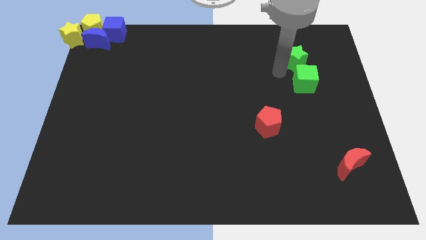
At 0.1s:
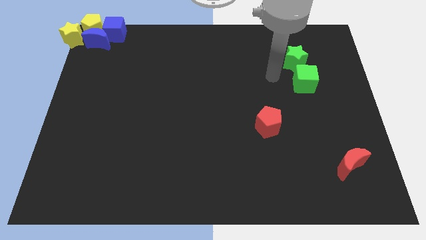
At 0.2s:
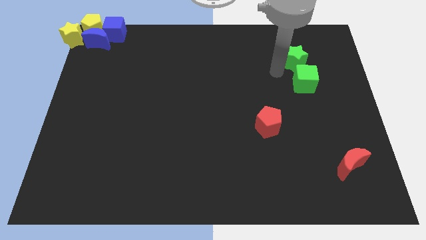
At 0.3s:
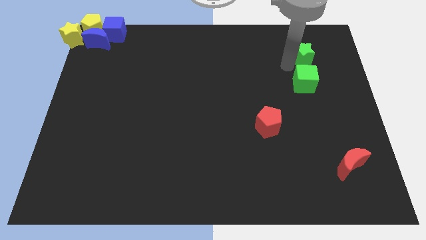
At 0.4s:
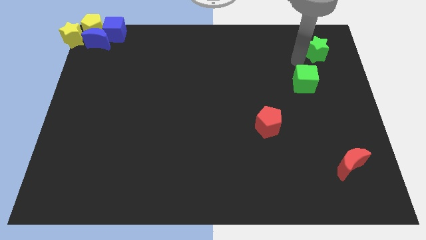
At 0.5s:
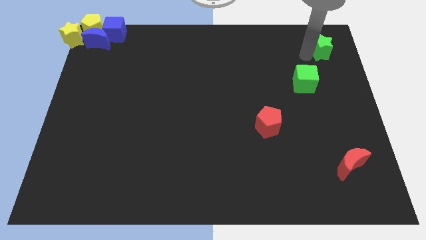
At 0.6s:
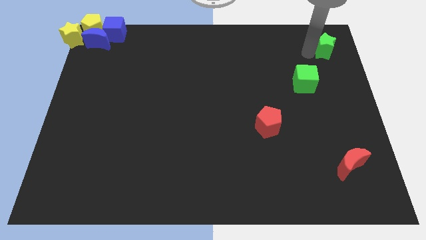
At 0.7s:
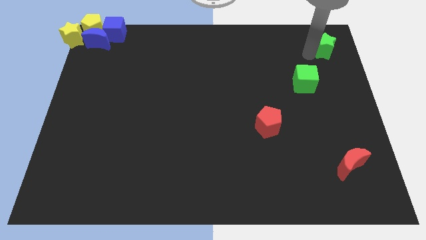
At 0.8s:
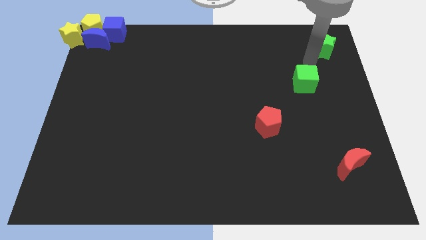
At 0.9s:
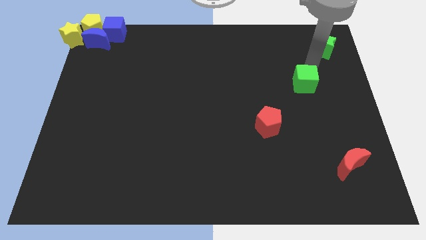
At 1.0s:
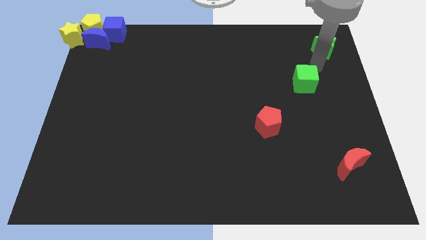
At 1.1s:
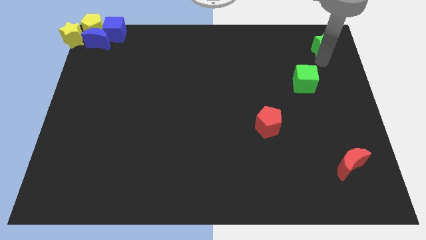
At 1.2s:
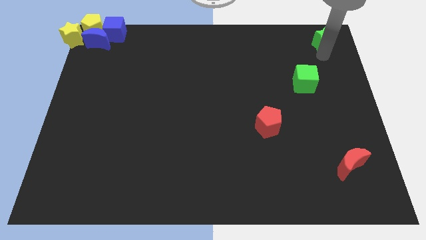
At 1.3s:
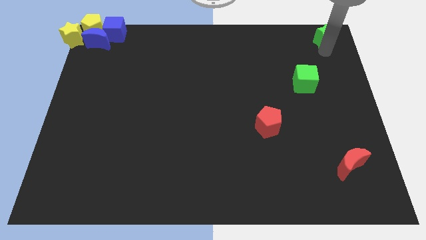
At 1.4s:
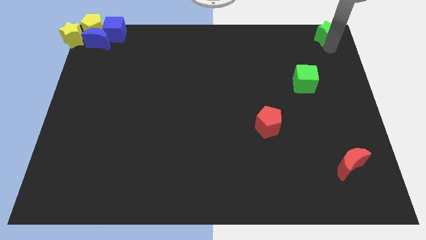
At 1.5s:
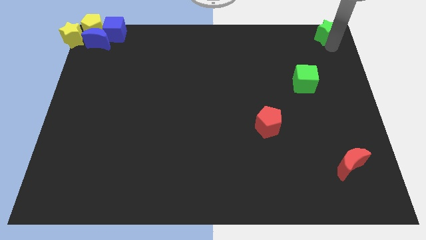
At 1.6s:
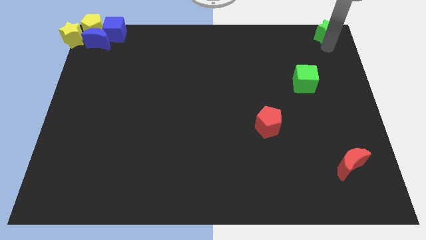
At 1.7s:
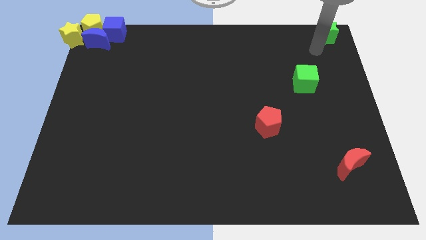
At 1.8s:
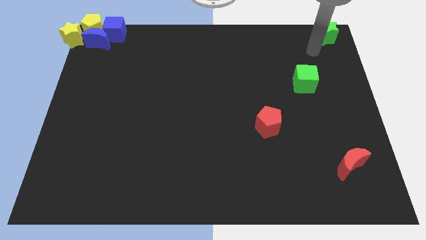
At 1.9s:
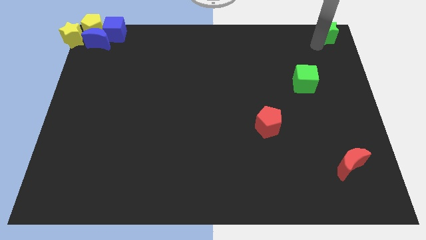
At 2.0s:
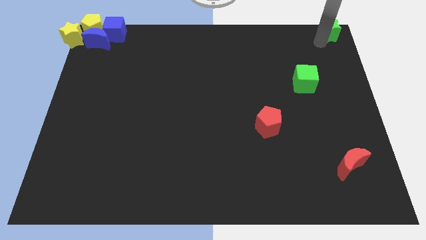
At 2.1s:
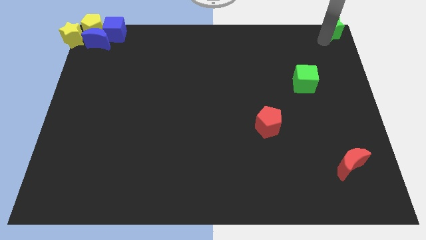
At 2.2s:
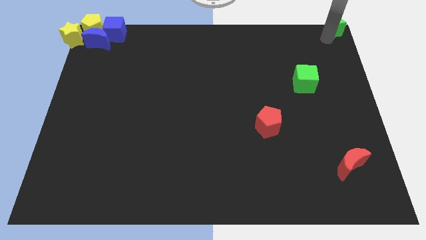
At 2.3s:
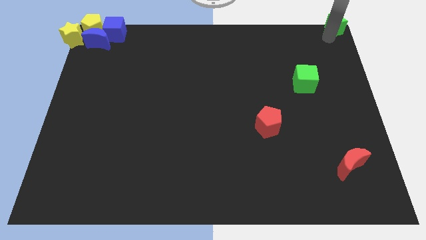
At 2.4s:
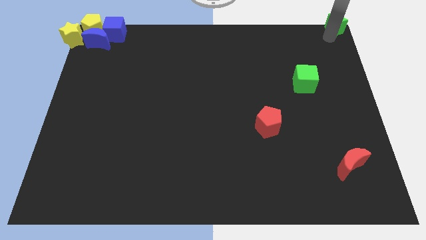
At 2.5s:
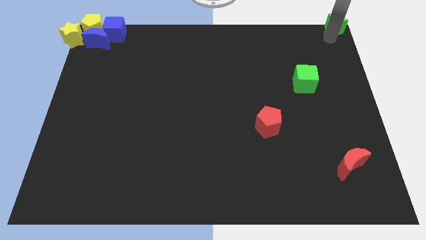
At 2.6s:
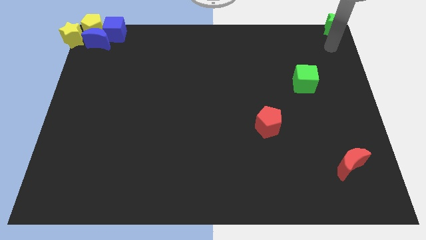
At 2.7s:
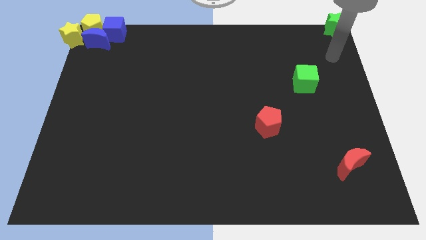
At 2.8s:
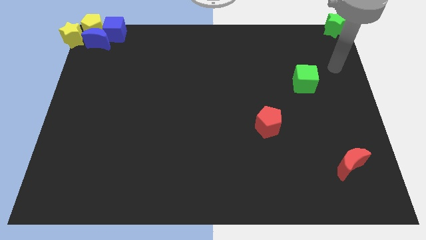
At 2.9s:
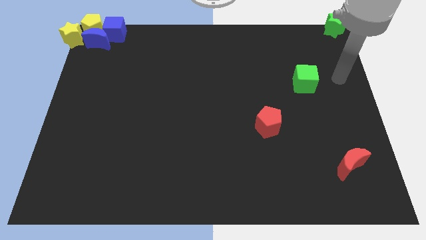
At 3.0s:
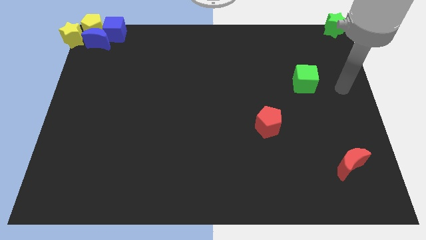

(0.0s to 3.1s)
move green star top bottom right corner of the board

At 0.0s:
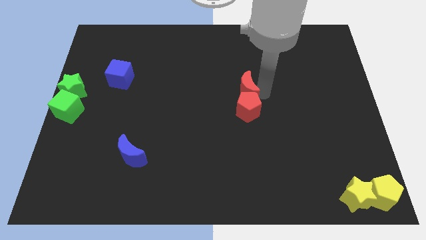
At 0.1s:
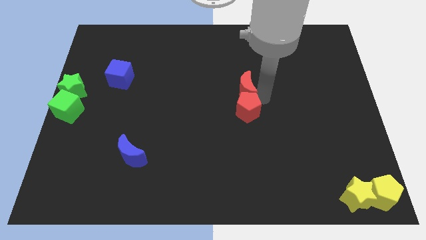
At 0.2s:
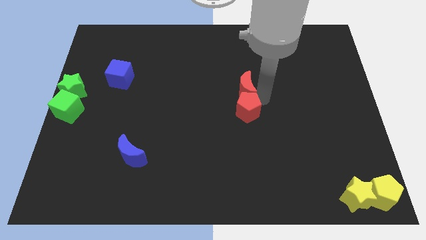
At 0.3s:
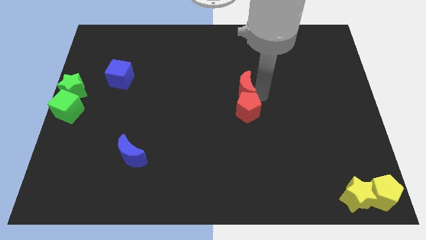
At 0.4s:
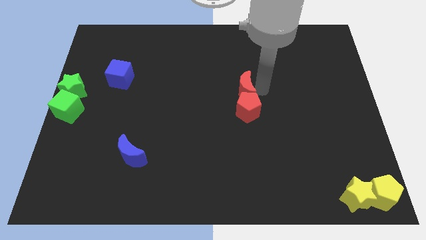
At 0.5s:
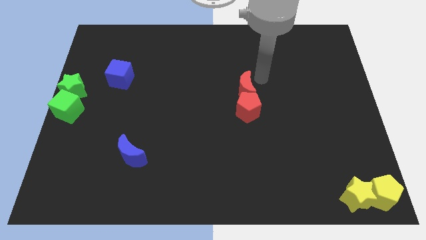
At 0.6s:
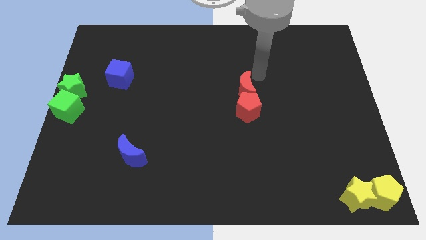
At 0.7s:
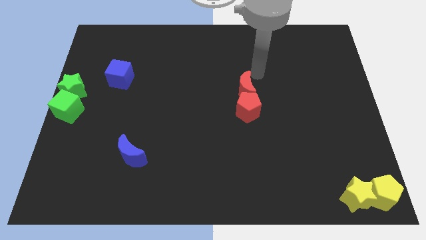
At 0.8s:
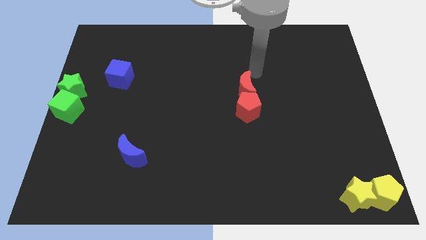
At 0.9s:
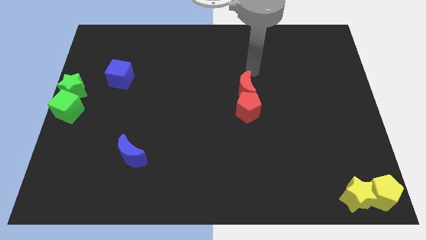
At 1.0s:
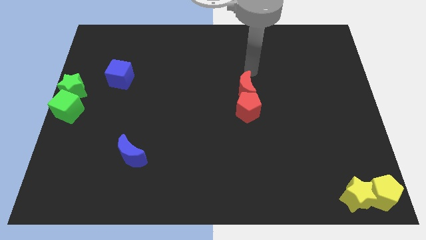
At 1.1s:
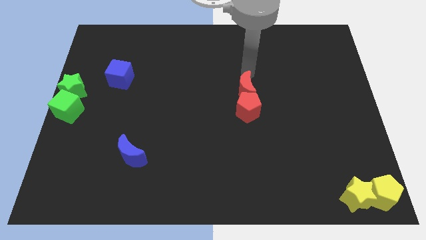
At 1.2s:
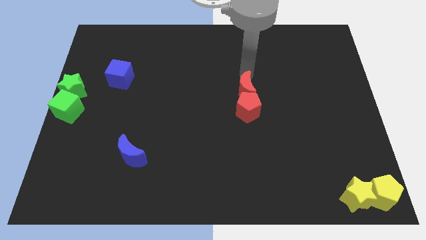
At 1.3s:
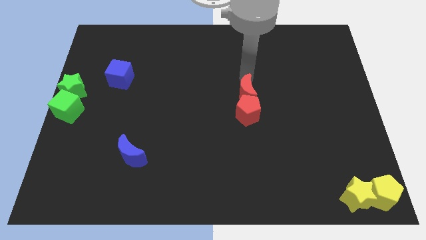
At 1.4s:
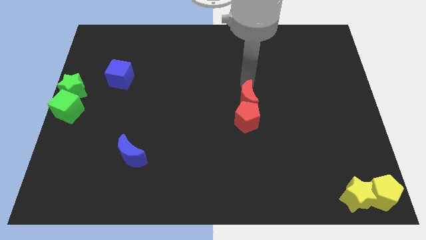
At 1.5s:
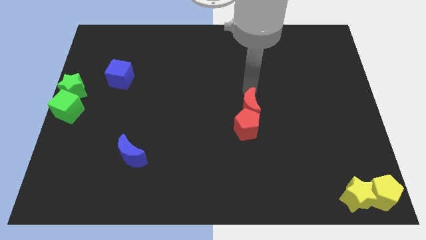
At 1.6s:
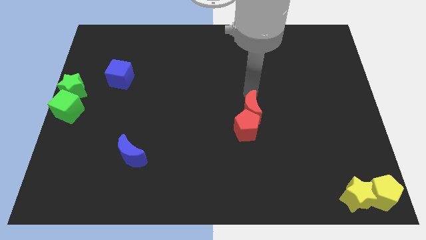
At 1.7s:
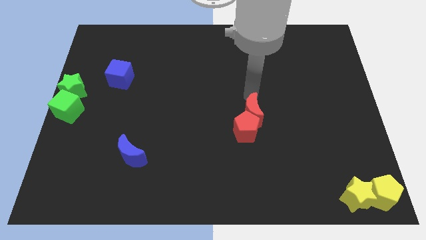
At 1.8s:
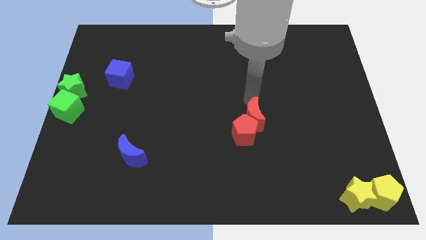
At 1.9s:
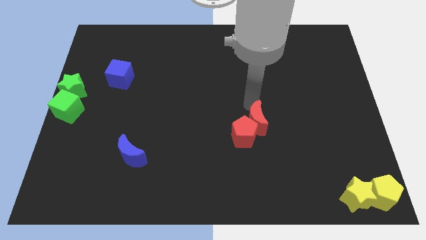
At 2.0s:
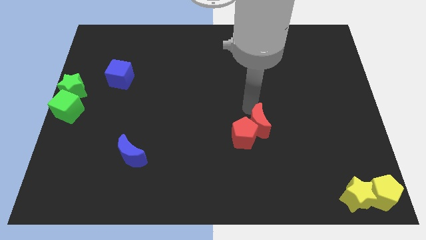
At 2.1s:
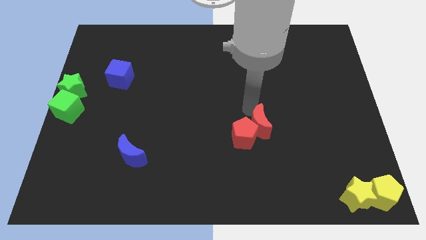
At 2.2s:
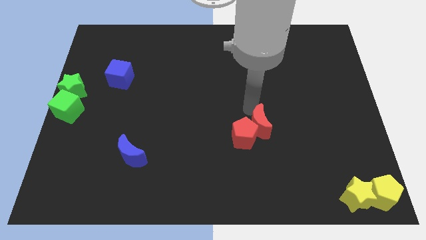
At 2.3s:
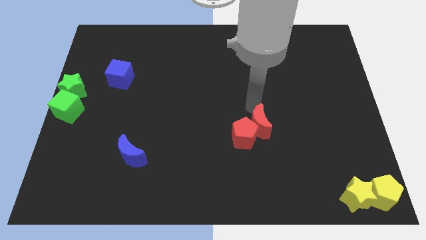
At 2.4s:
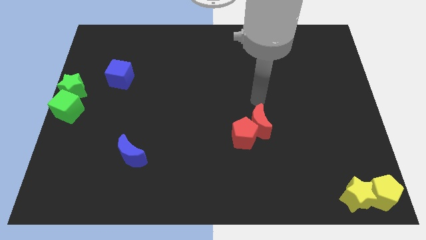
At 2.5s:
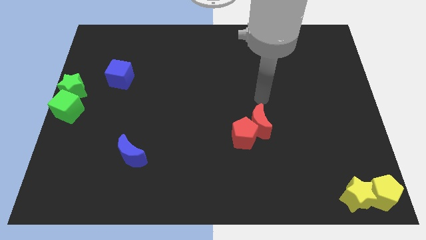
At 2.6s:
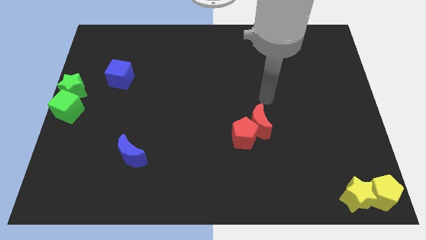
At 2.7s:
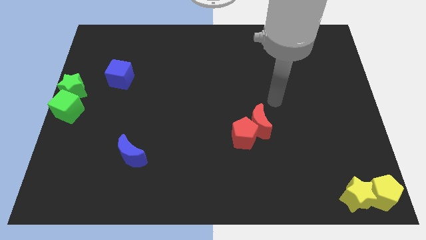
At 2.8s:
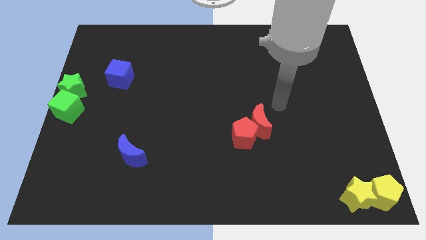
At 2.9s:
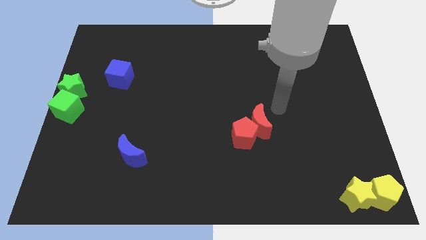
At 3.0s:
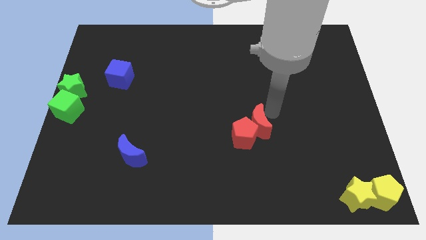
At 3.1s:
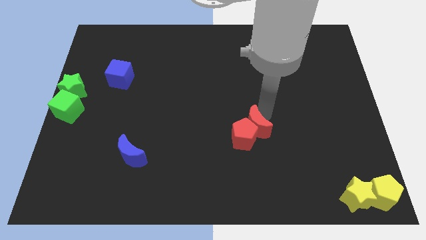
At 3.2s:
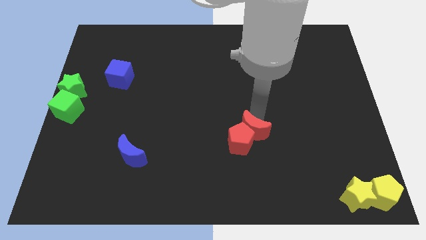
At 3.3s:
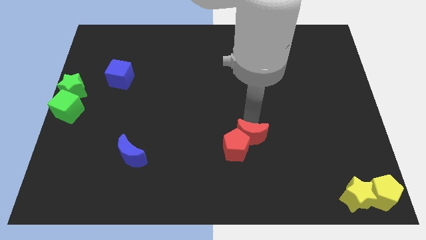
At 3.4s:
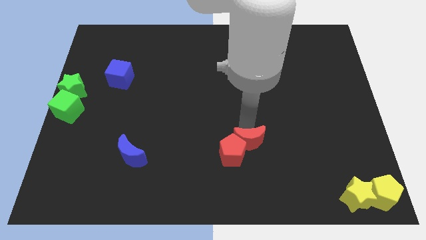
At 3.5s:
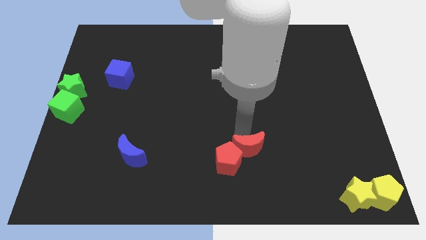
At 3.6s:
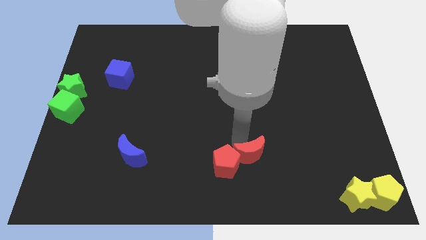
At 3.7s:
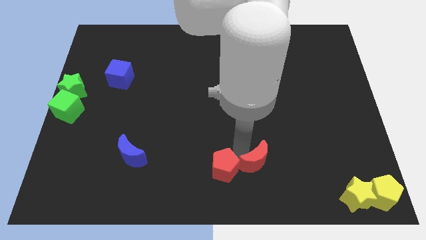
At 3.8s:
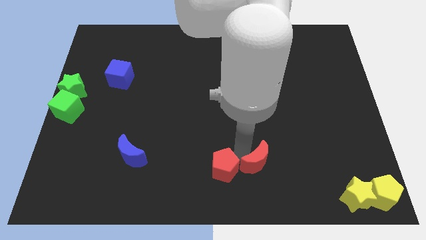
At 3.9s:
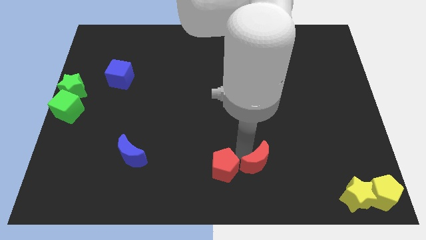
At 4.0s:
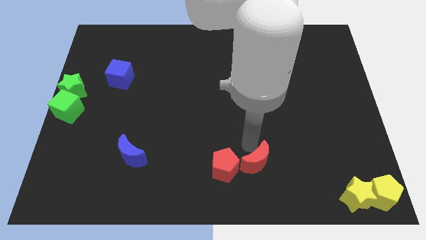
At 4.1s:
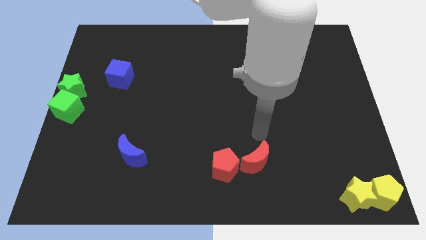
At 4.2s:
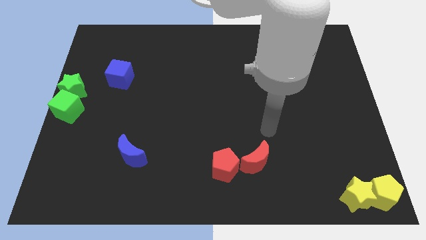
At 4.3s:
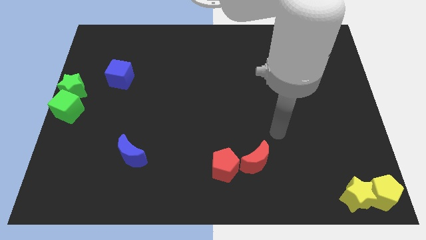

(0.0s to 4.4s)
push the red blocks downwards

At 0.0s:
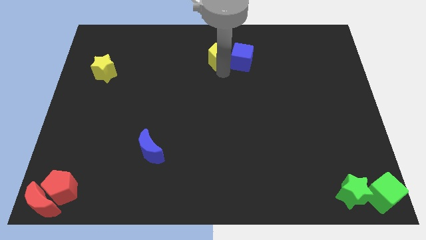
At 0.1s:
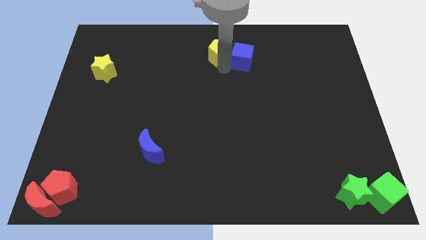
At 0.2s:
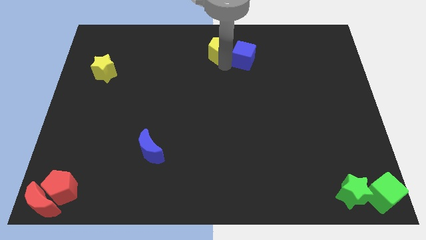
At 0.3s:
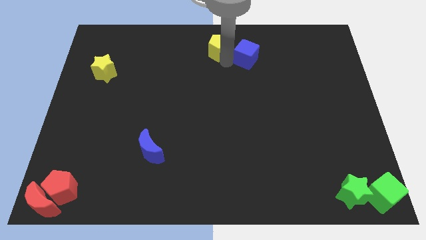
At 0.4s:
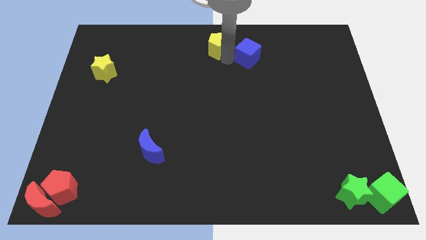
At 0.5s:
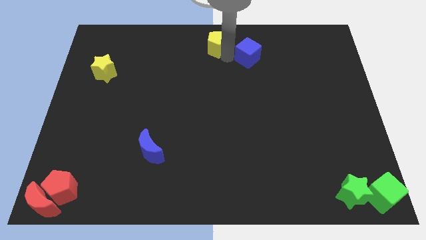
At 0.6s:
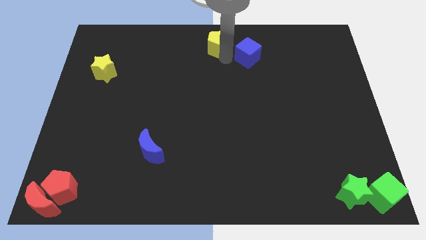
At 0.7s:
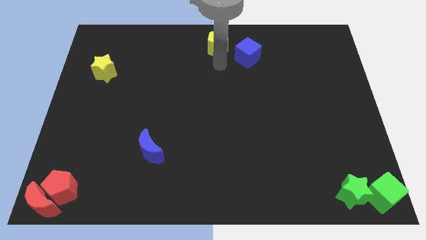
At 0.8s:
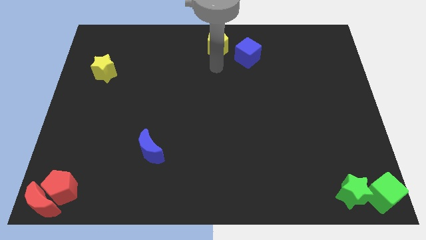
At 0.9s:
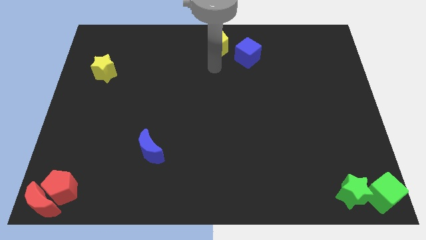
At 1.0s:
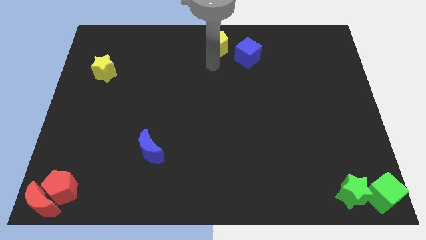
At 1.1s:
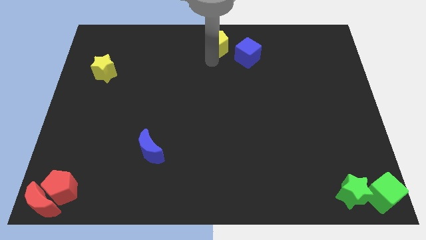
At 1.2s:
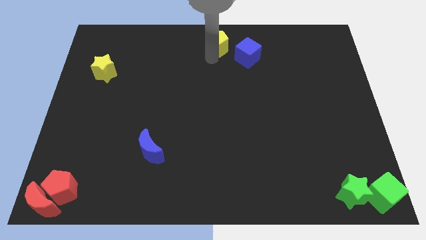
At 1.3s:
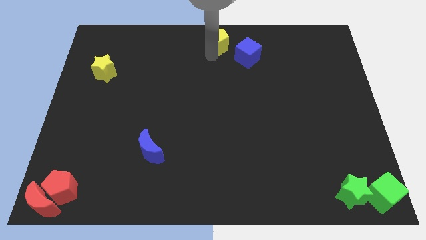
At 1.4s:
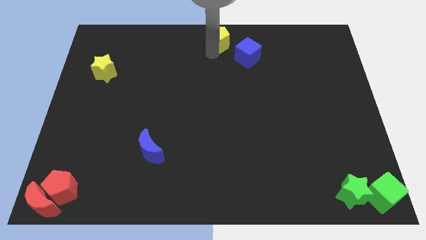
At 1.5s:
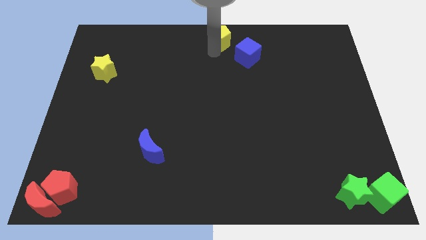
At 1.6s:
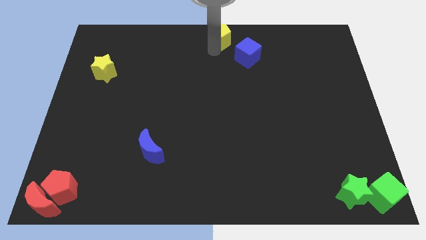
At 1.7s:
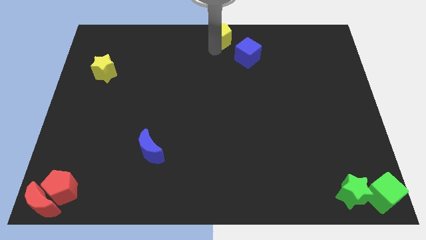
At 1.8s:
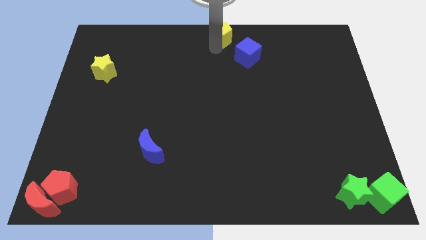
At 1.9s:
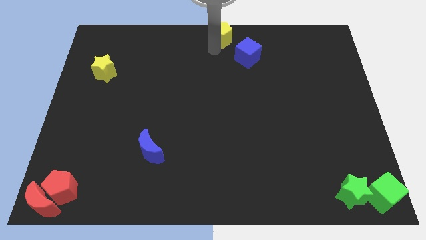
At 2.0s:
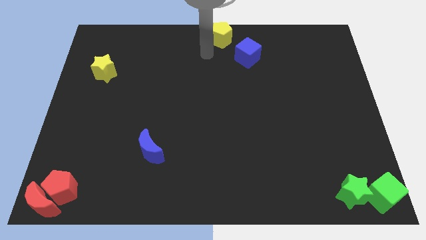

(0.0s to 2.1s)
slide the yellow pentagon to the top center of the board
